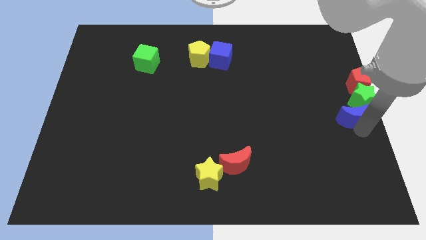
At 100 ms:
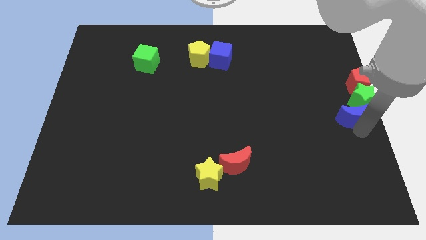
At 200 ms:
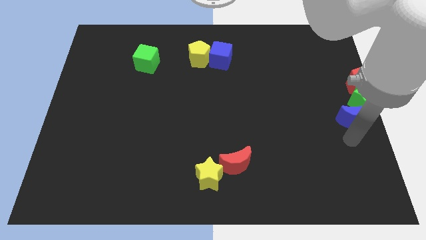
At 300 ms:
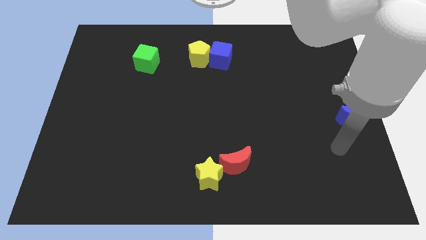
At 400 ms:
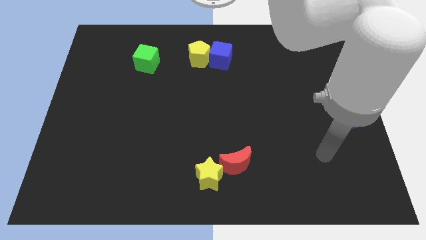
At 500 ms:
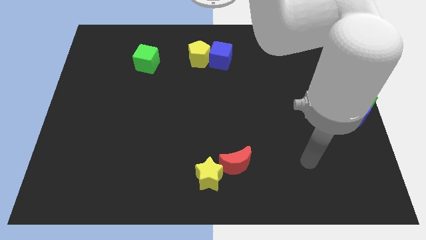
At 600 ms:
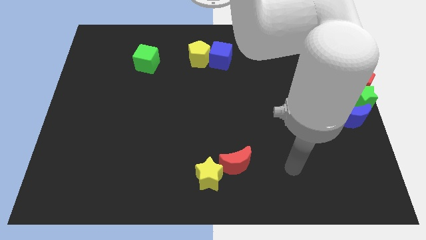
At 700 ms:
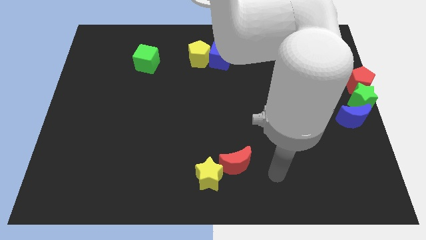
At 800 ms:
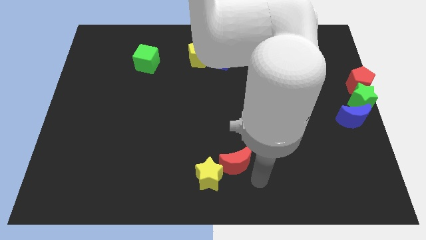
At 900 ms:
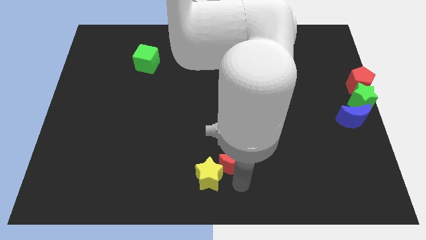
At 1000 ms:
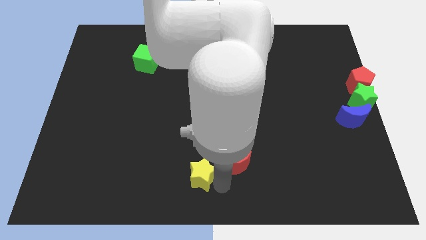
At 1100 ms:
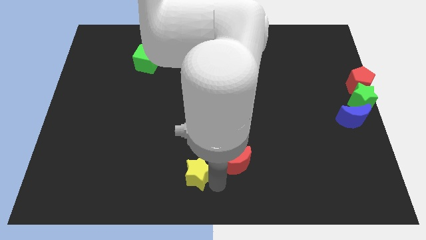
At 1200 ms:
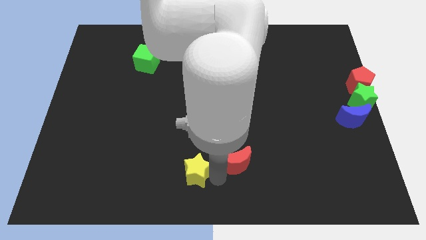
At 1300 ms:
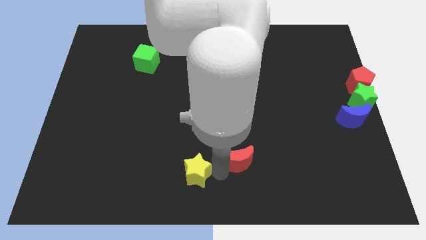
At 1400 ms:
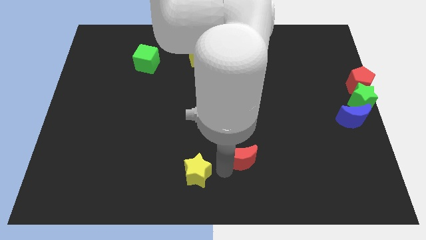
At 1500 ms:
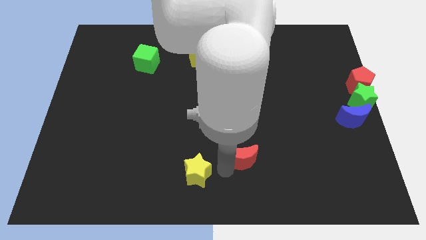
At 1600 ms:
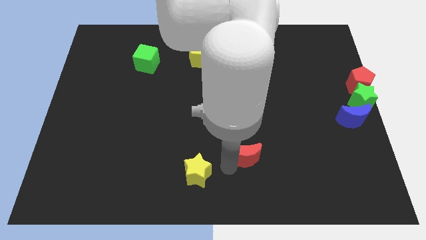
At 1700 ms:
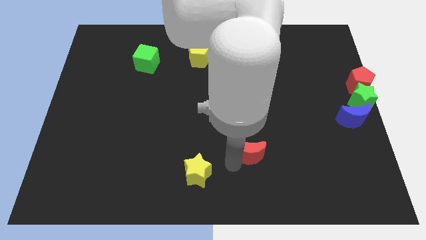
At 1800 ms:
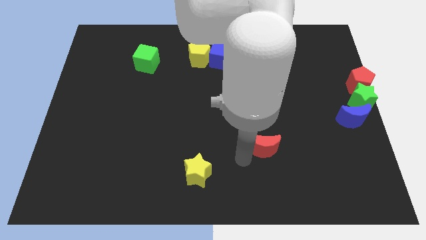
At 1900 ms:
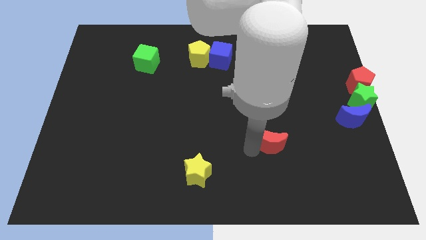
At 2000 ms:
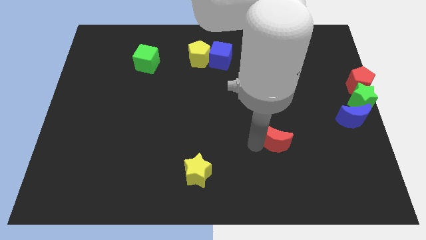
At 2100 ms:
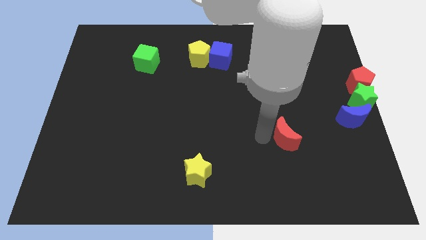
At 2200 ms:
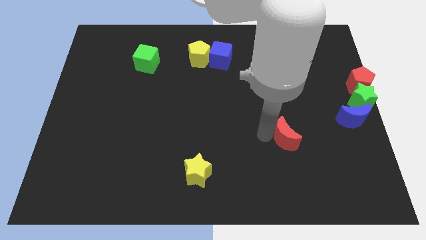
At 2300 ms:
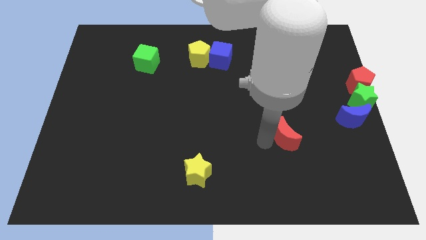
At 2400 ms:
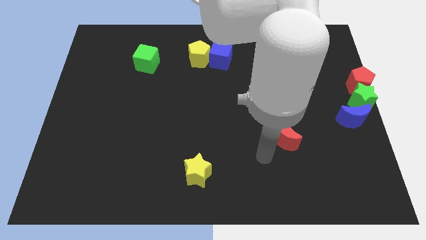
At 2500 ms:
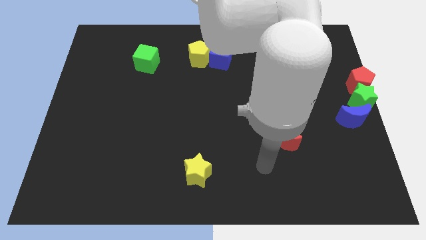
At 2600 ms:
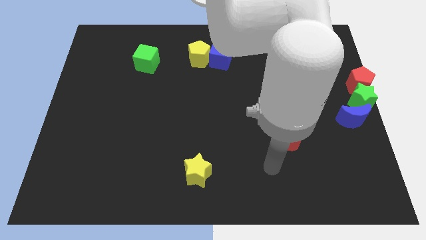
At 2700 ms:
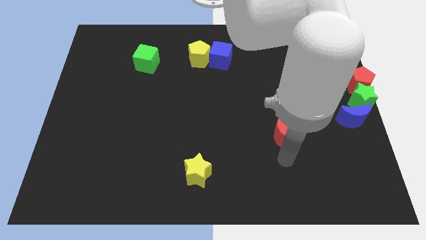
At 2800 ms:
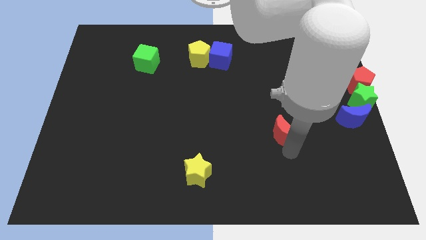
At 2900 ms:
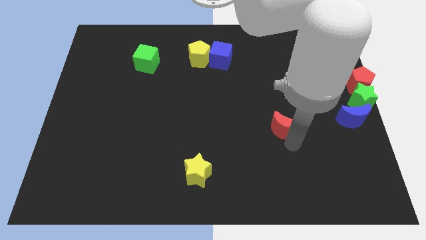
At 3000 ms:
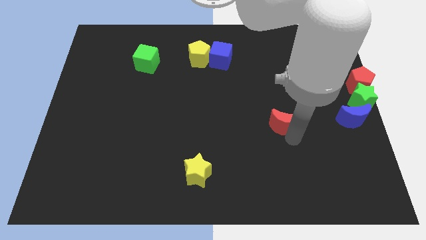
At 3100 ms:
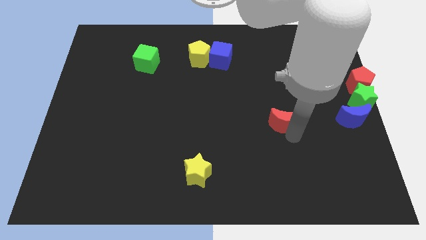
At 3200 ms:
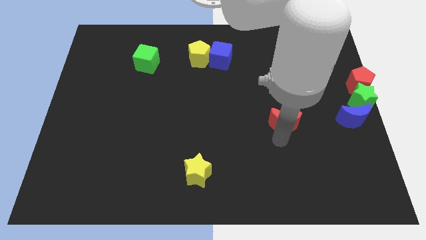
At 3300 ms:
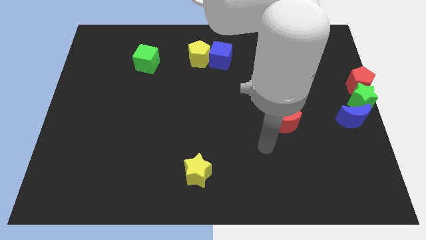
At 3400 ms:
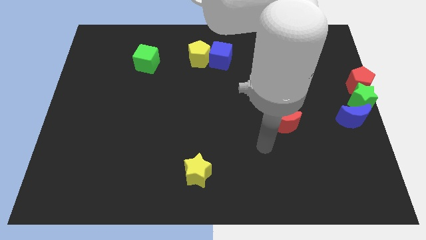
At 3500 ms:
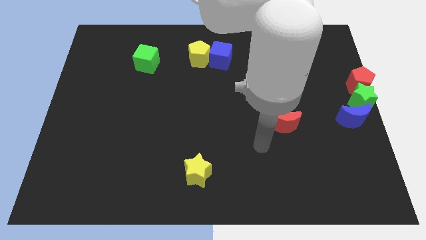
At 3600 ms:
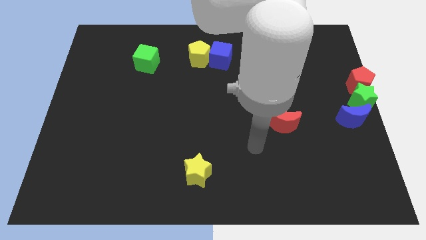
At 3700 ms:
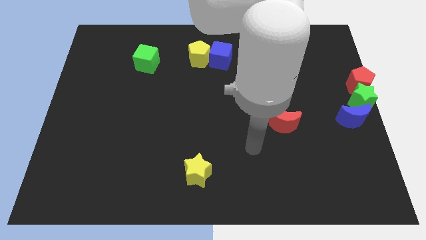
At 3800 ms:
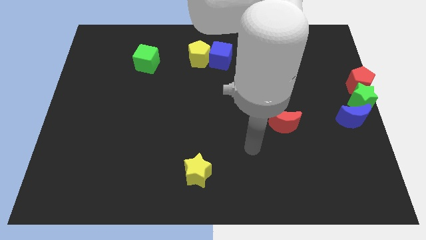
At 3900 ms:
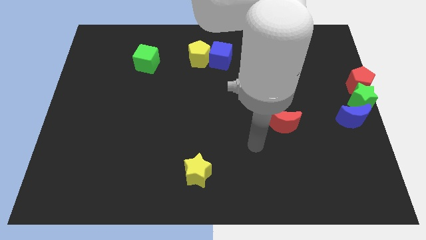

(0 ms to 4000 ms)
move the red moon horizontally to the left side of the blue moon

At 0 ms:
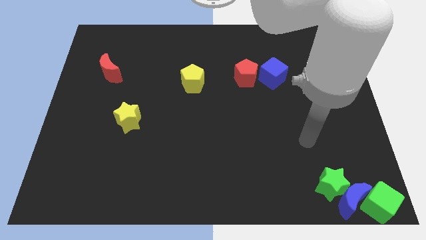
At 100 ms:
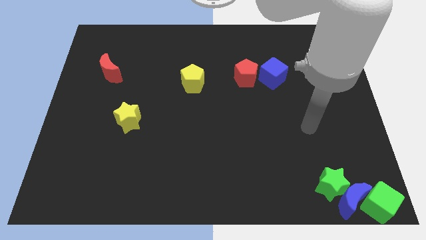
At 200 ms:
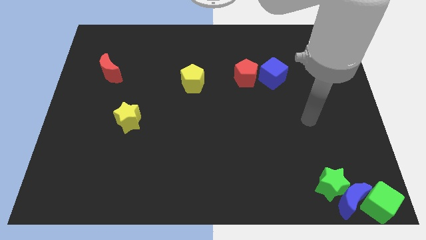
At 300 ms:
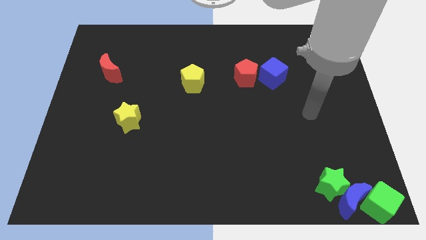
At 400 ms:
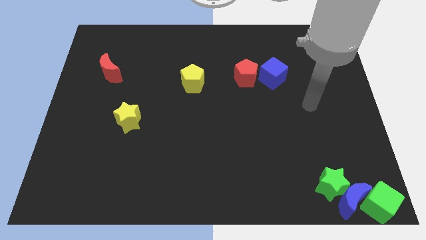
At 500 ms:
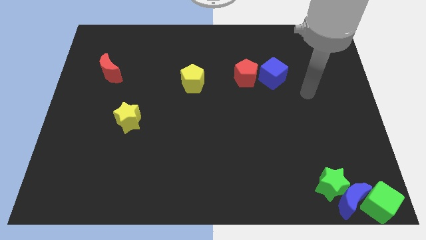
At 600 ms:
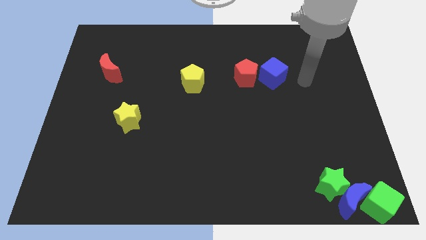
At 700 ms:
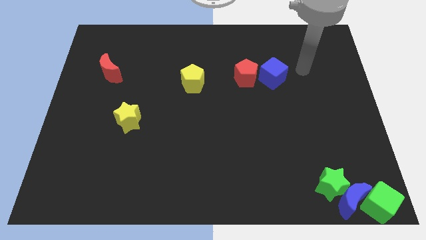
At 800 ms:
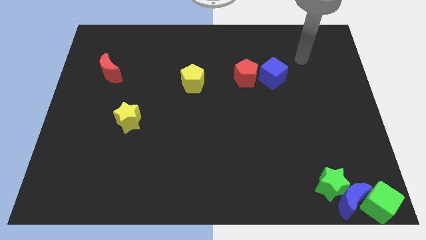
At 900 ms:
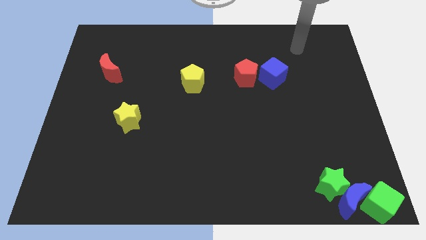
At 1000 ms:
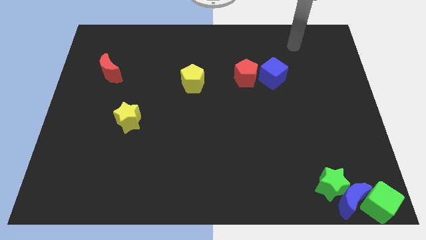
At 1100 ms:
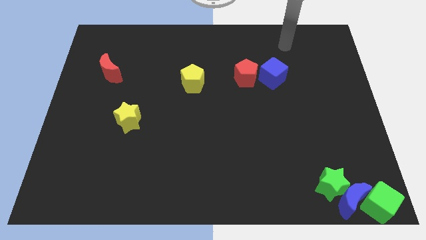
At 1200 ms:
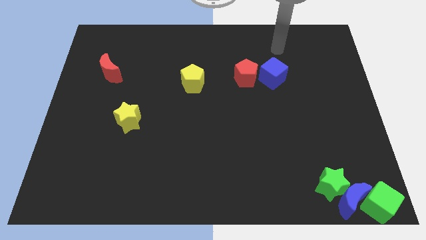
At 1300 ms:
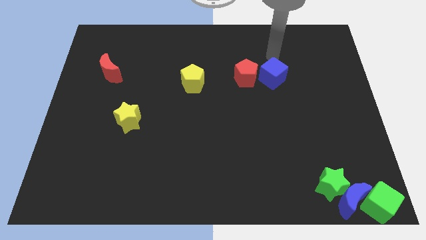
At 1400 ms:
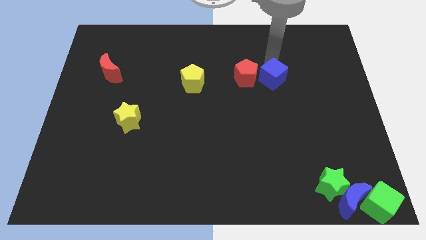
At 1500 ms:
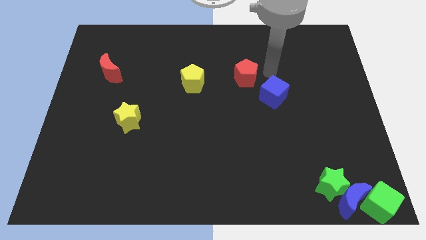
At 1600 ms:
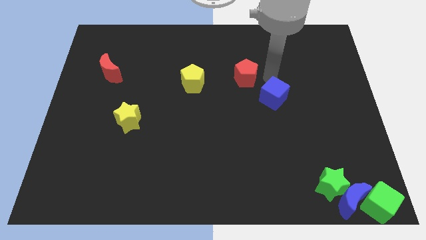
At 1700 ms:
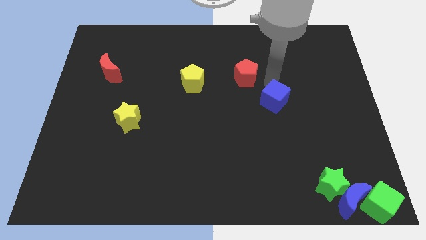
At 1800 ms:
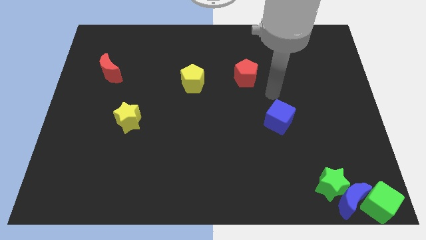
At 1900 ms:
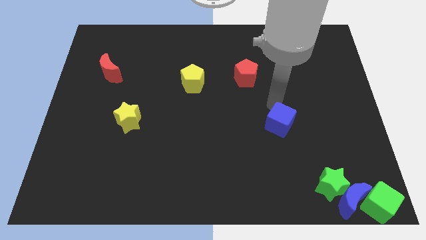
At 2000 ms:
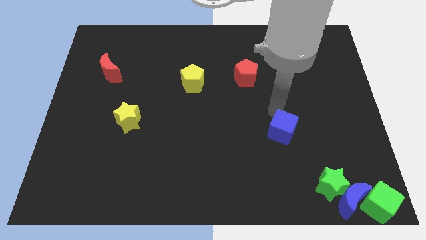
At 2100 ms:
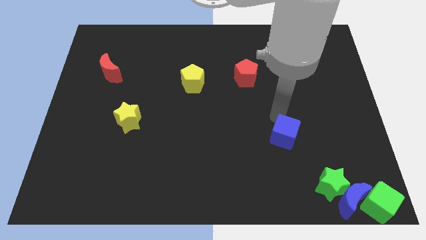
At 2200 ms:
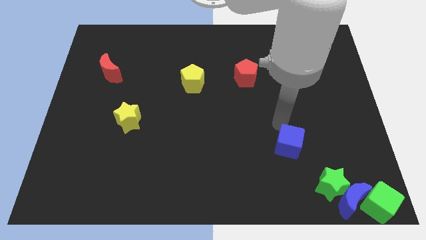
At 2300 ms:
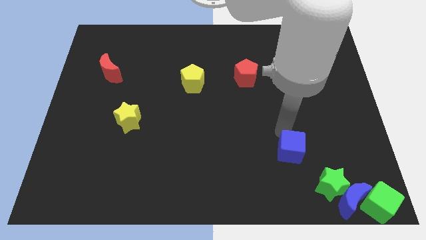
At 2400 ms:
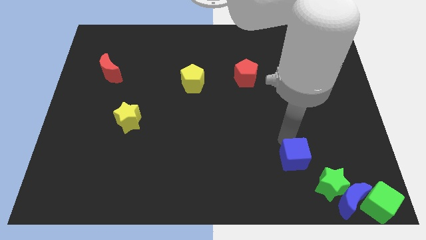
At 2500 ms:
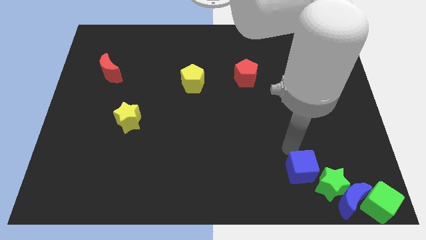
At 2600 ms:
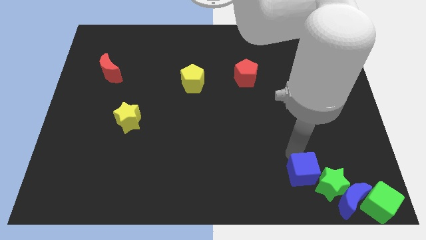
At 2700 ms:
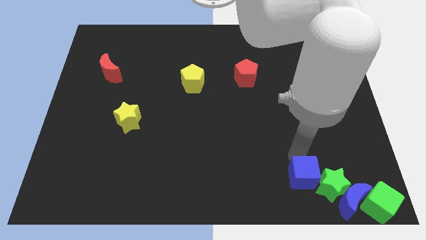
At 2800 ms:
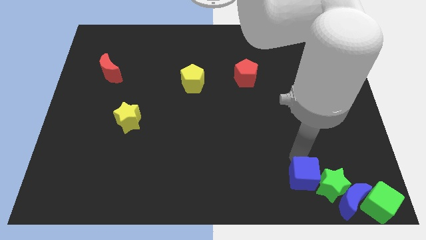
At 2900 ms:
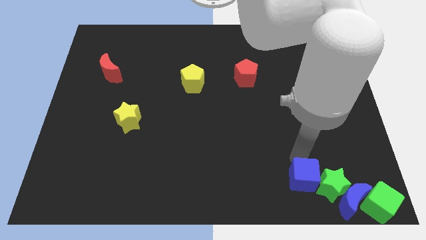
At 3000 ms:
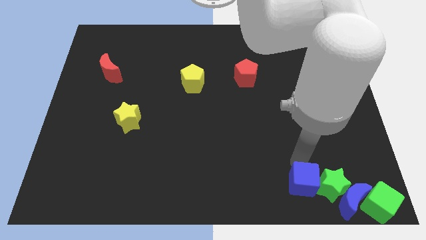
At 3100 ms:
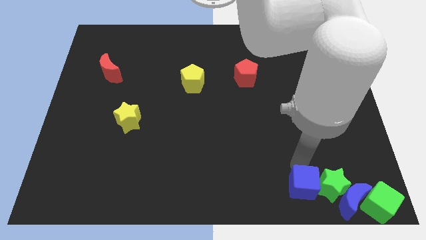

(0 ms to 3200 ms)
place the blue cube to the left of green star

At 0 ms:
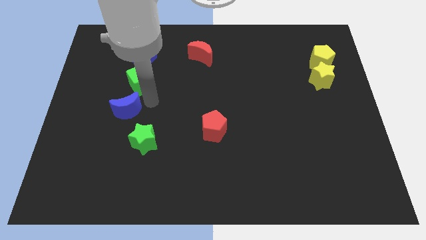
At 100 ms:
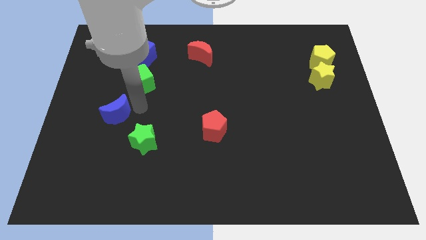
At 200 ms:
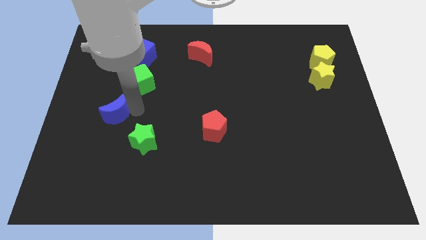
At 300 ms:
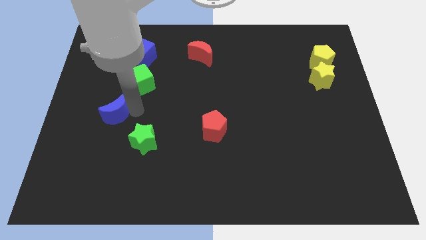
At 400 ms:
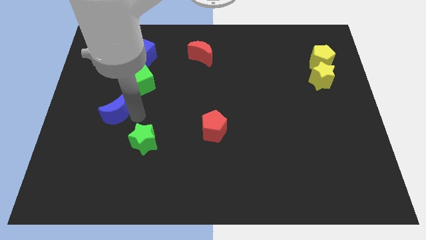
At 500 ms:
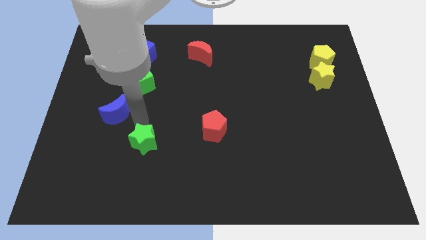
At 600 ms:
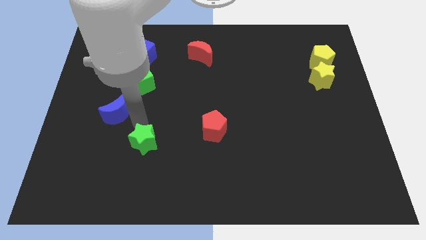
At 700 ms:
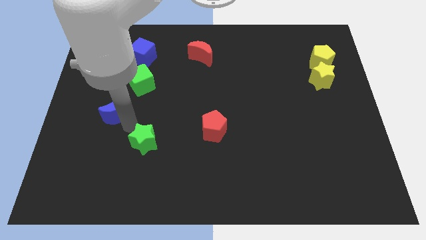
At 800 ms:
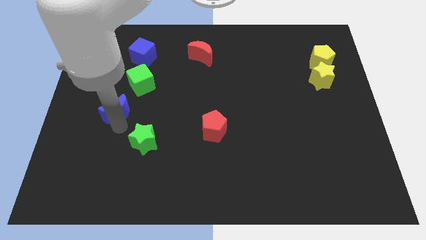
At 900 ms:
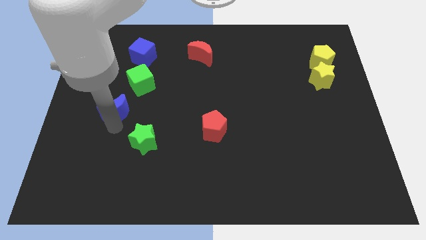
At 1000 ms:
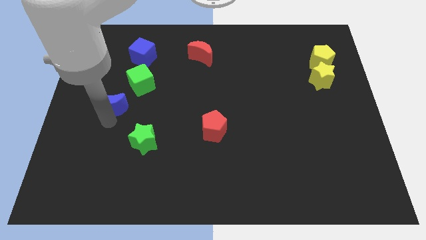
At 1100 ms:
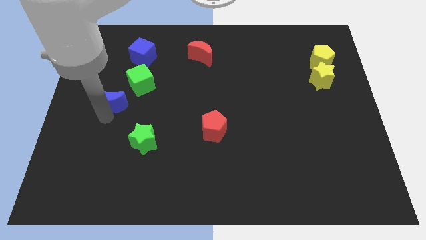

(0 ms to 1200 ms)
push the blue crescent towards the center left of the board

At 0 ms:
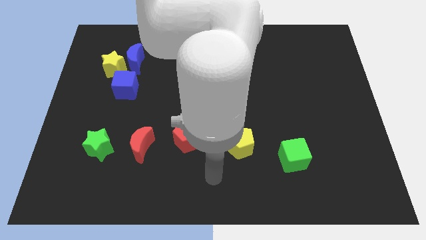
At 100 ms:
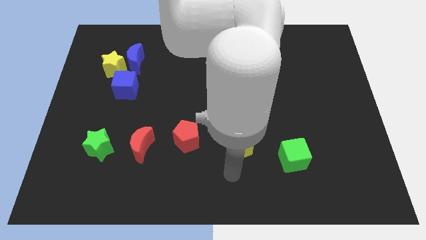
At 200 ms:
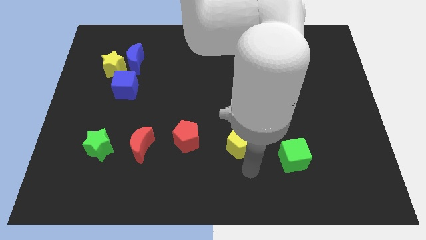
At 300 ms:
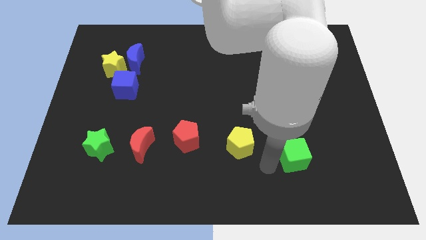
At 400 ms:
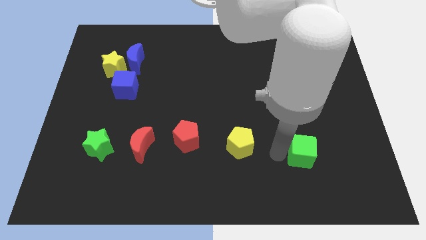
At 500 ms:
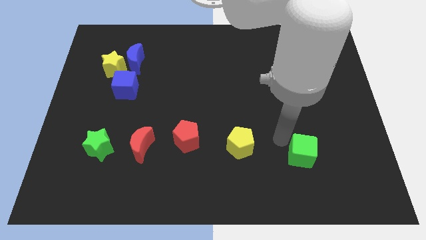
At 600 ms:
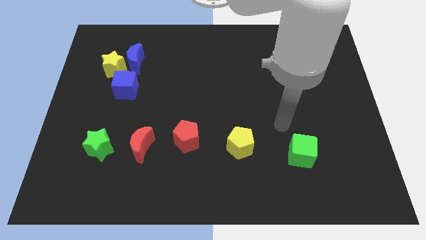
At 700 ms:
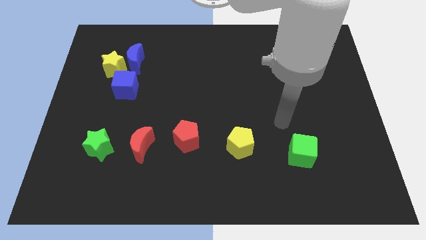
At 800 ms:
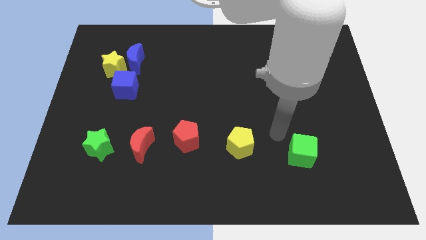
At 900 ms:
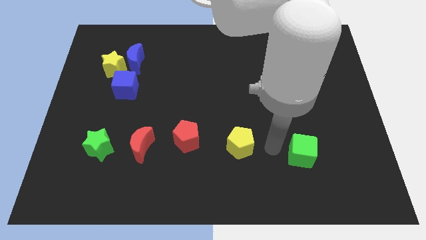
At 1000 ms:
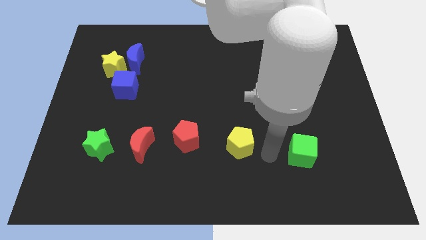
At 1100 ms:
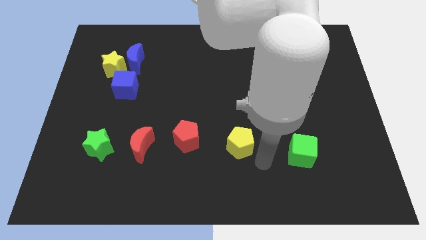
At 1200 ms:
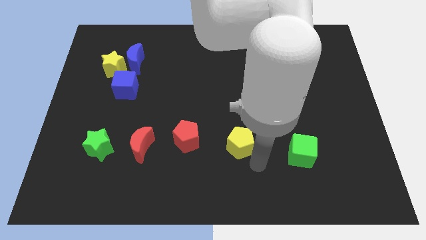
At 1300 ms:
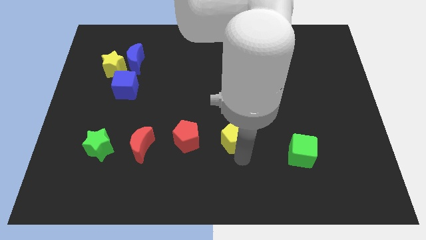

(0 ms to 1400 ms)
touch the green cube
